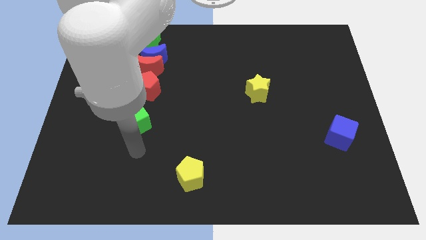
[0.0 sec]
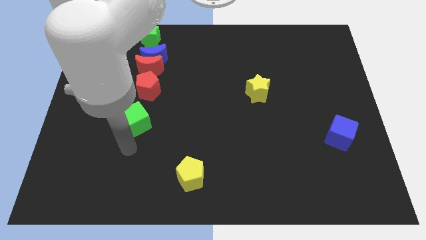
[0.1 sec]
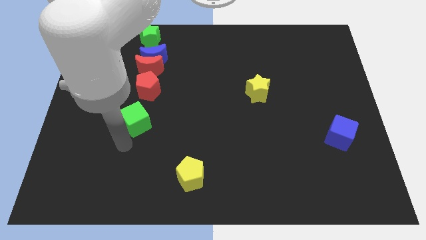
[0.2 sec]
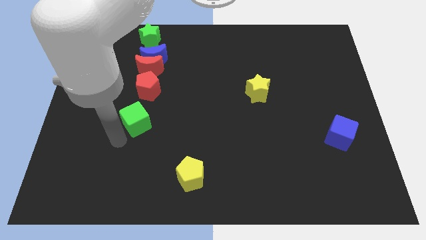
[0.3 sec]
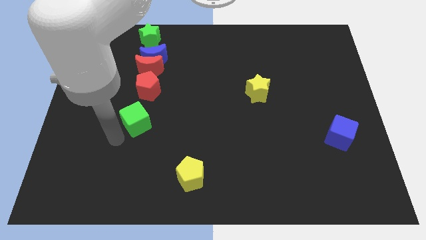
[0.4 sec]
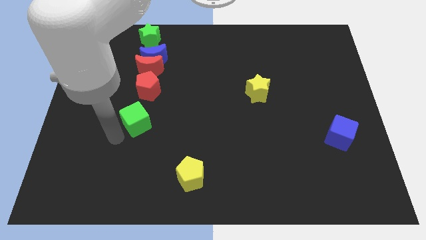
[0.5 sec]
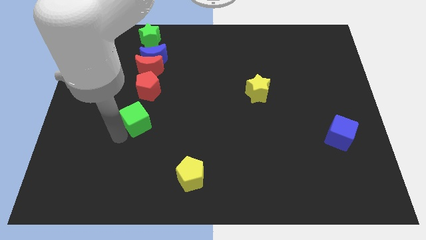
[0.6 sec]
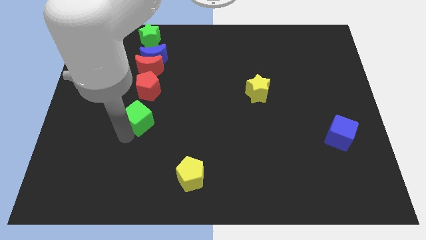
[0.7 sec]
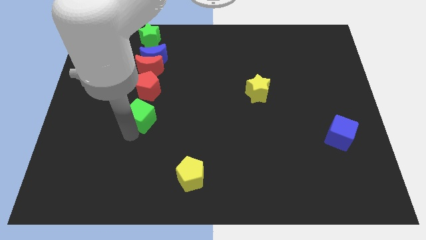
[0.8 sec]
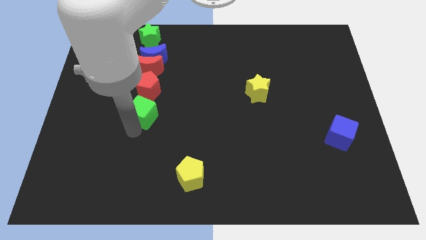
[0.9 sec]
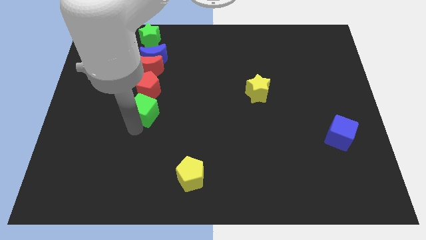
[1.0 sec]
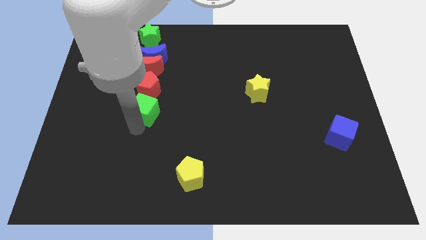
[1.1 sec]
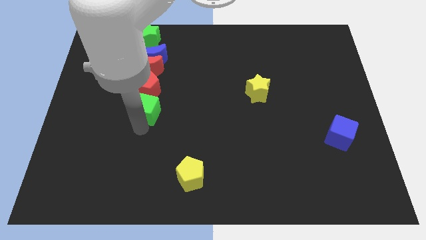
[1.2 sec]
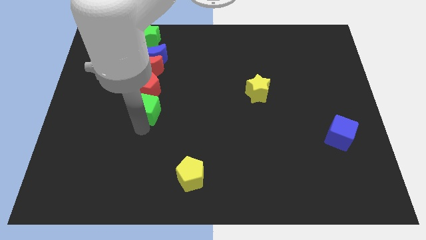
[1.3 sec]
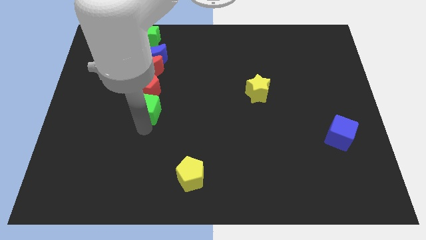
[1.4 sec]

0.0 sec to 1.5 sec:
move the green cube below the red pentagon

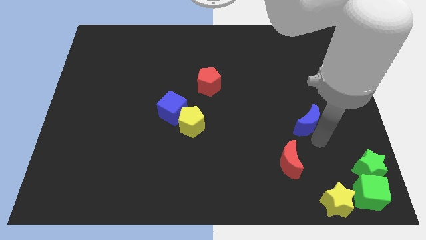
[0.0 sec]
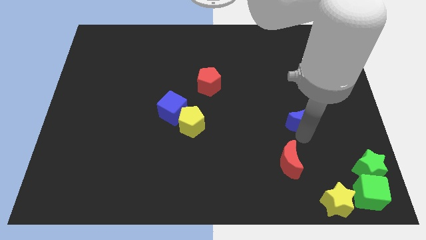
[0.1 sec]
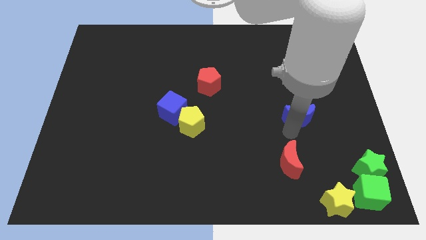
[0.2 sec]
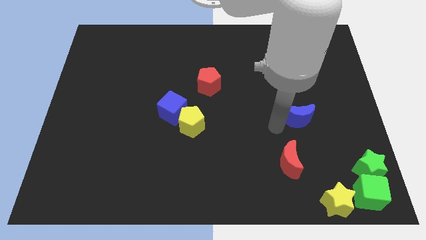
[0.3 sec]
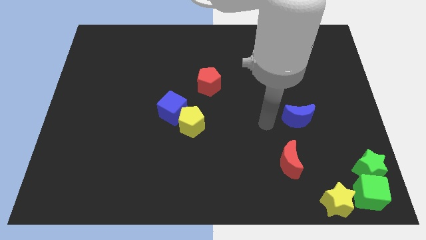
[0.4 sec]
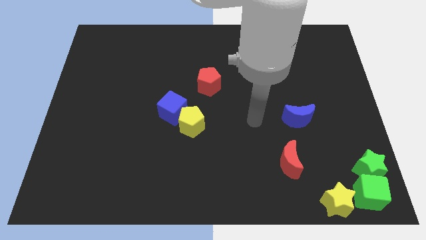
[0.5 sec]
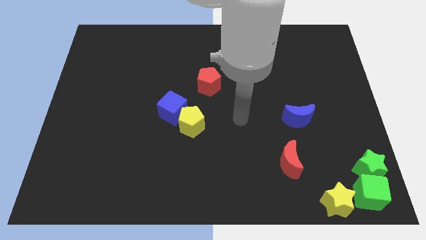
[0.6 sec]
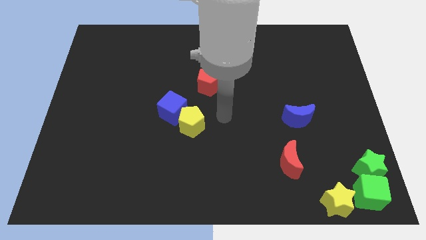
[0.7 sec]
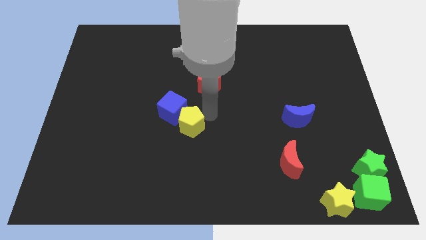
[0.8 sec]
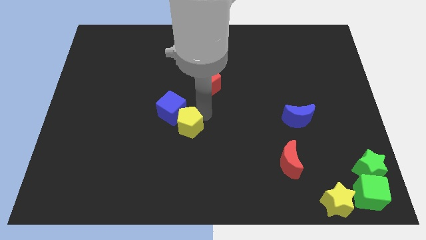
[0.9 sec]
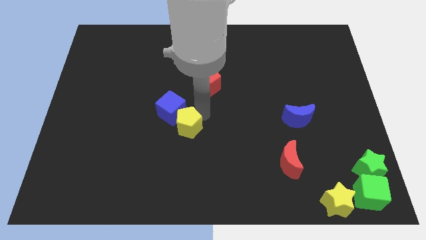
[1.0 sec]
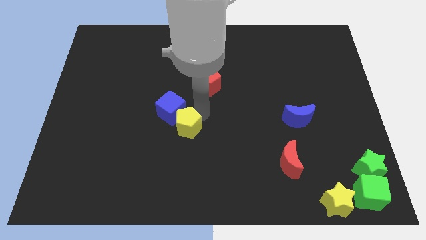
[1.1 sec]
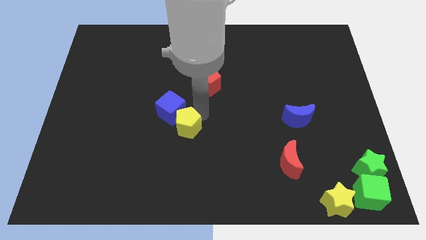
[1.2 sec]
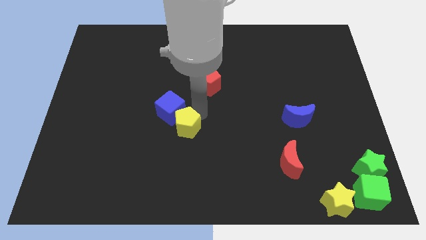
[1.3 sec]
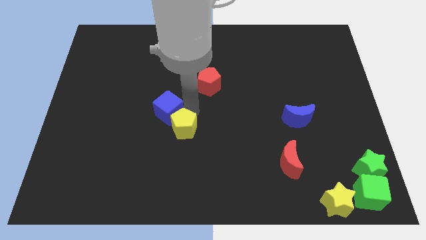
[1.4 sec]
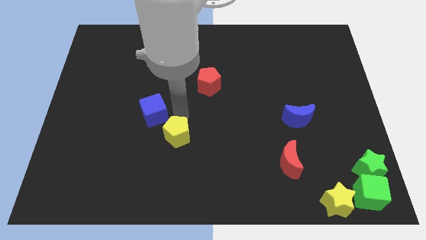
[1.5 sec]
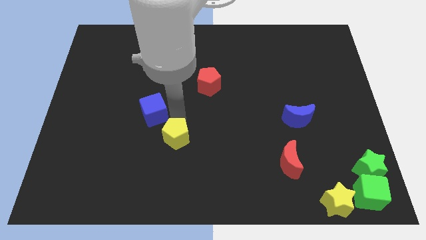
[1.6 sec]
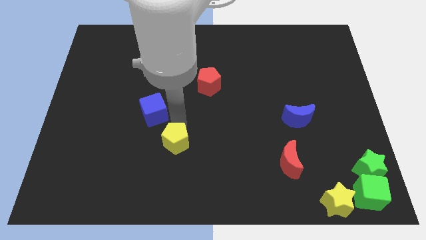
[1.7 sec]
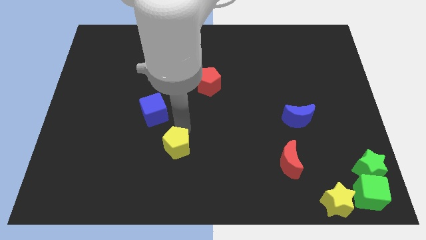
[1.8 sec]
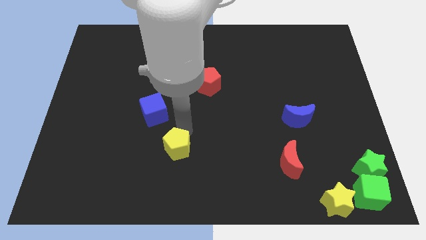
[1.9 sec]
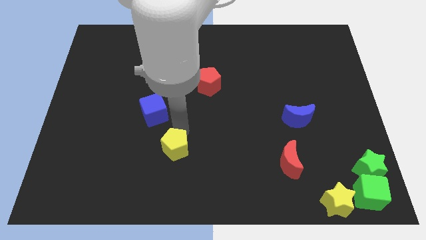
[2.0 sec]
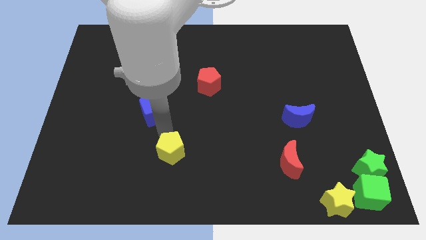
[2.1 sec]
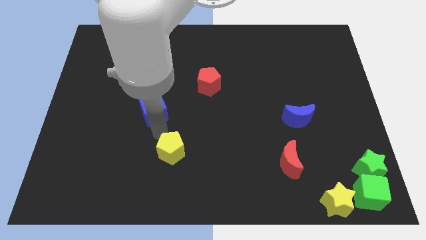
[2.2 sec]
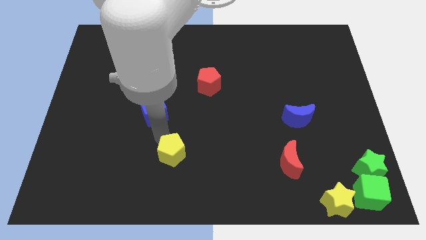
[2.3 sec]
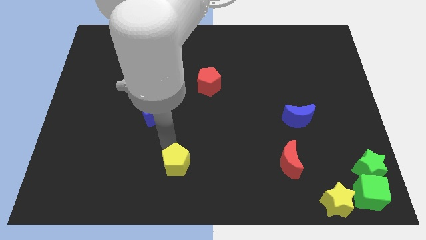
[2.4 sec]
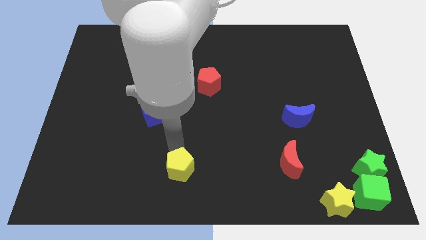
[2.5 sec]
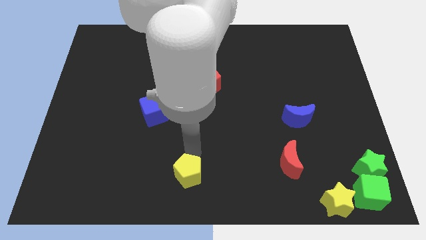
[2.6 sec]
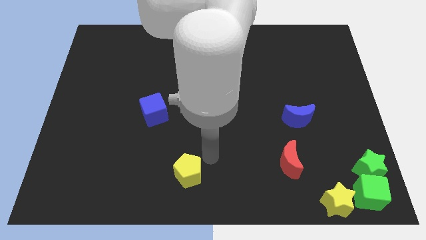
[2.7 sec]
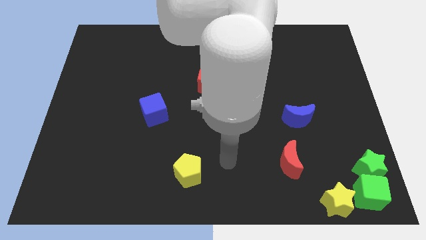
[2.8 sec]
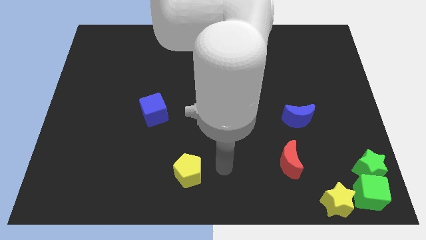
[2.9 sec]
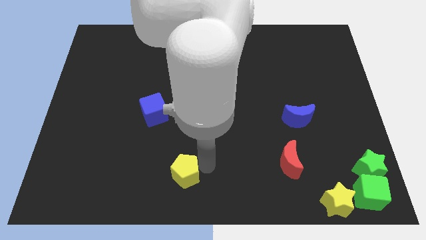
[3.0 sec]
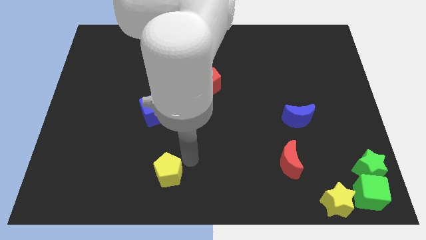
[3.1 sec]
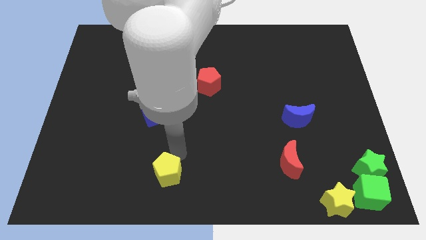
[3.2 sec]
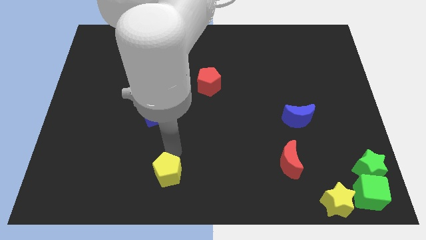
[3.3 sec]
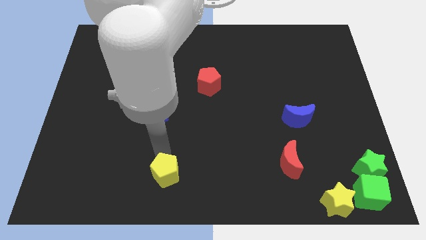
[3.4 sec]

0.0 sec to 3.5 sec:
place the yellow pentagon vertically below the blue cube

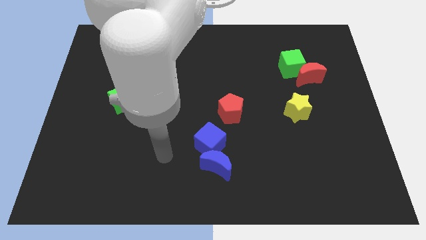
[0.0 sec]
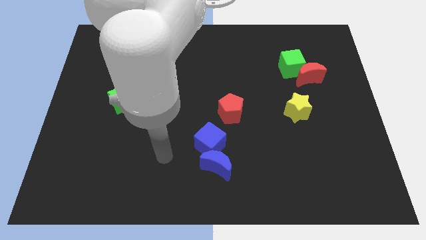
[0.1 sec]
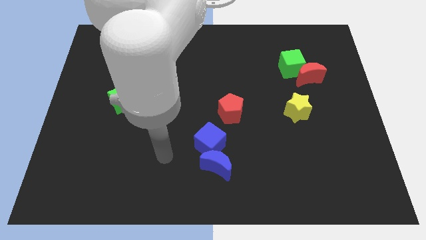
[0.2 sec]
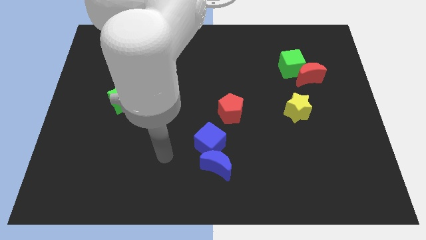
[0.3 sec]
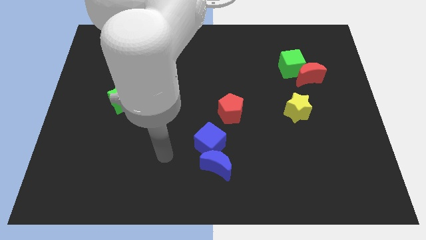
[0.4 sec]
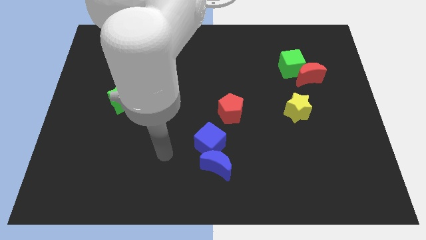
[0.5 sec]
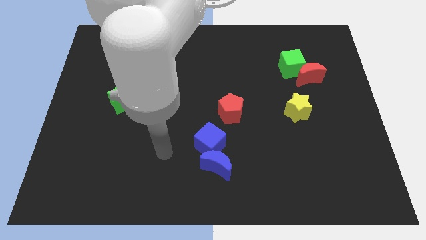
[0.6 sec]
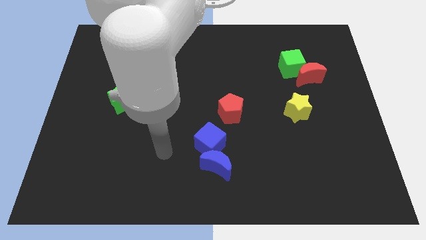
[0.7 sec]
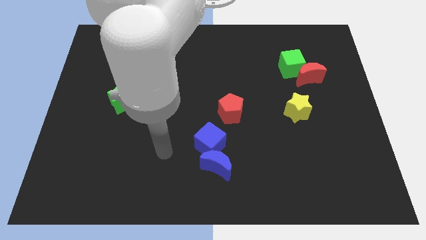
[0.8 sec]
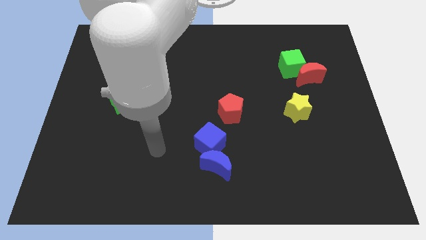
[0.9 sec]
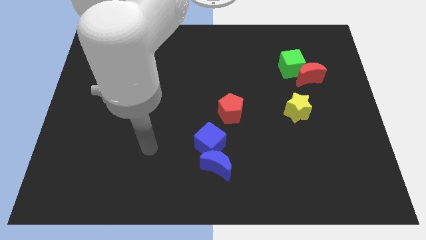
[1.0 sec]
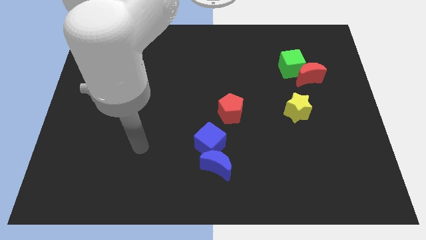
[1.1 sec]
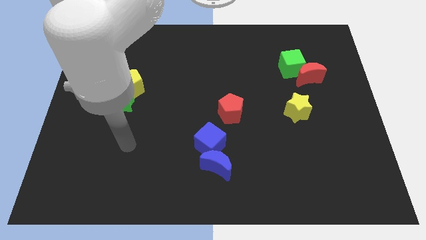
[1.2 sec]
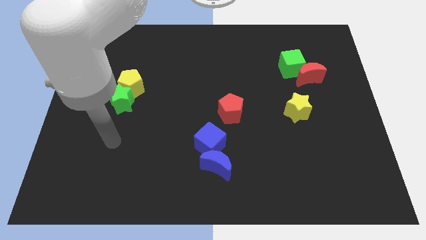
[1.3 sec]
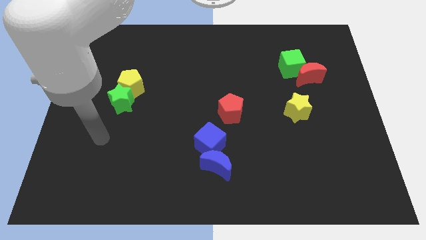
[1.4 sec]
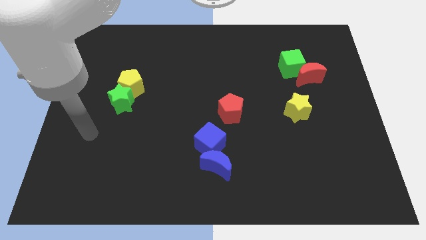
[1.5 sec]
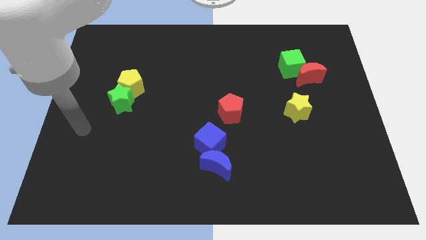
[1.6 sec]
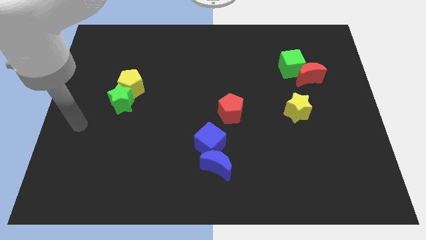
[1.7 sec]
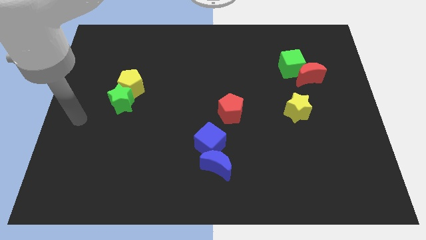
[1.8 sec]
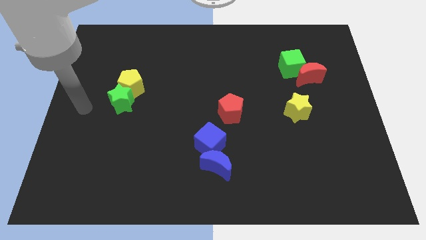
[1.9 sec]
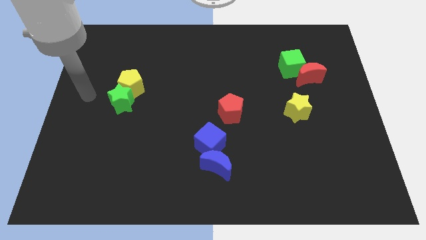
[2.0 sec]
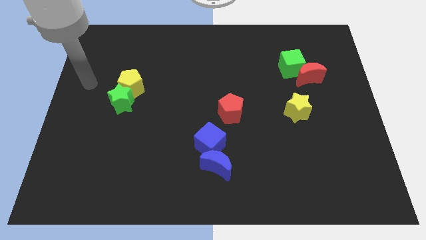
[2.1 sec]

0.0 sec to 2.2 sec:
point your hand at the left side of the green star

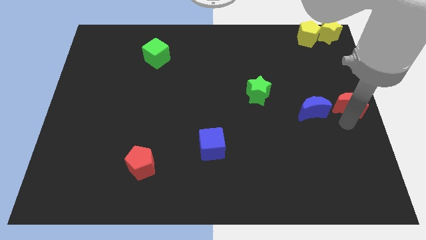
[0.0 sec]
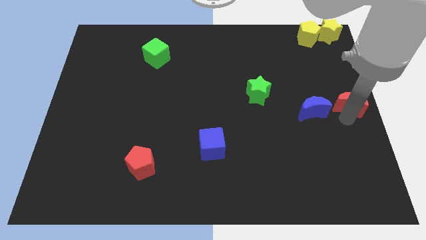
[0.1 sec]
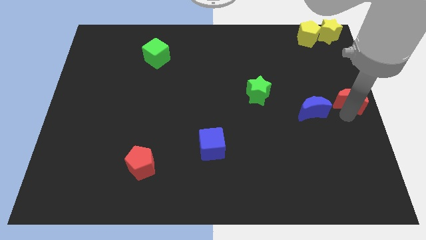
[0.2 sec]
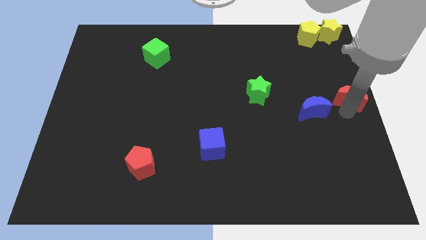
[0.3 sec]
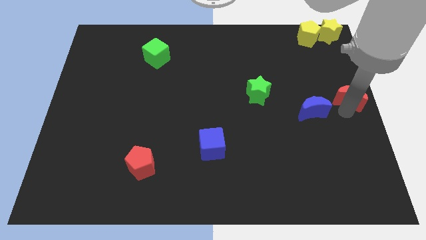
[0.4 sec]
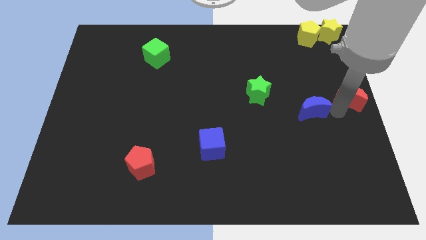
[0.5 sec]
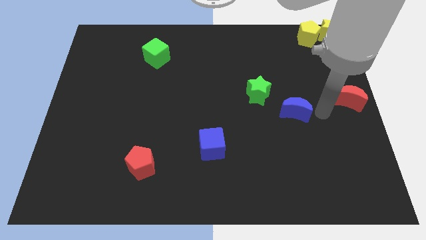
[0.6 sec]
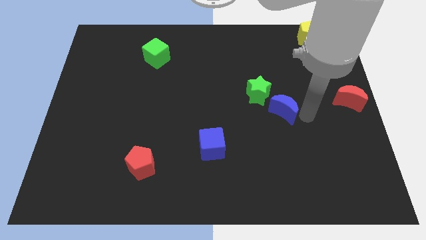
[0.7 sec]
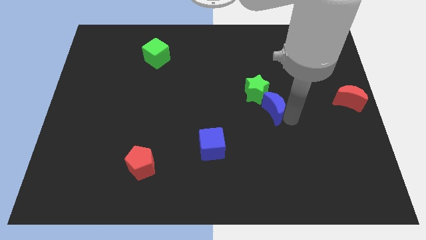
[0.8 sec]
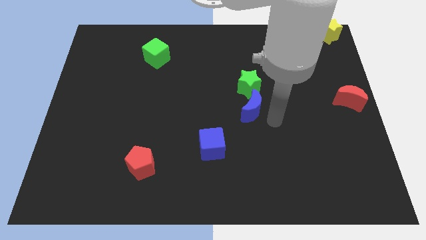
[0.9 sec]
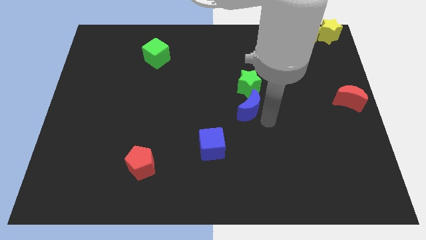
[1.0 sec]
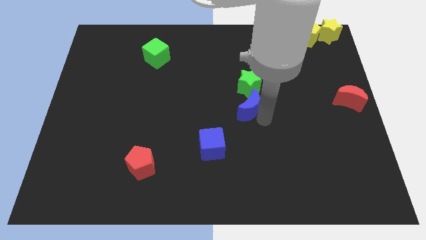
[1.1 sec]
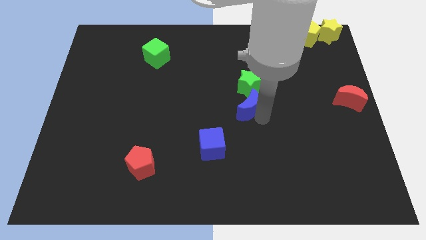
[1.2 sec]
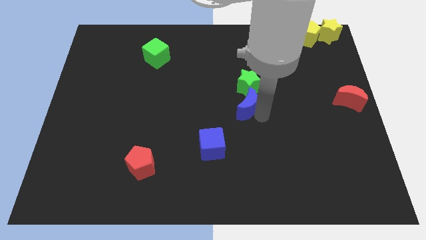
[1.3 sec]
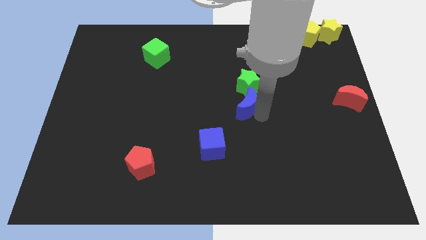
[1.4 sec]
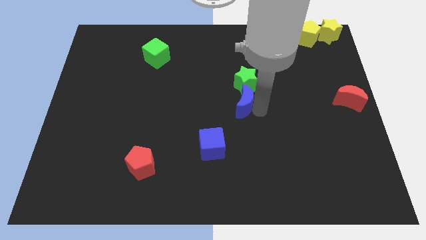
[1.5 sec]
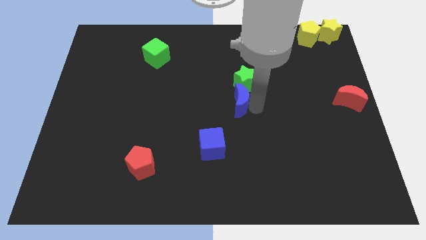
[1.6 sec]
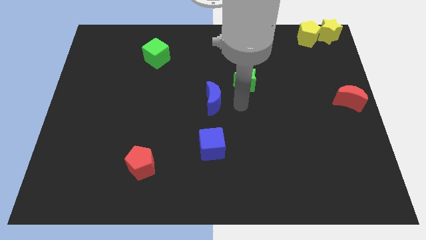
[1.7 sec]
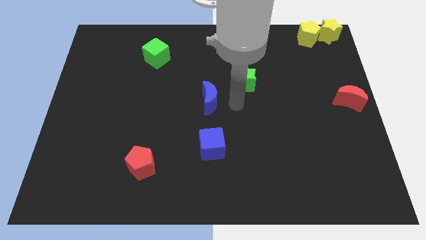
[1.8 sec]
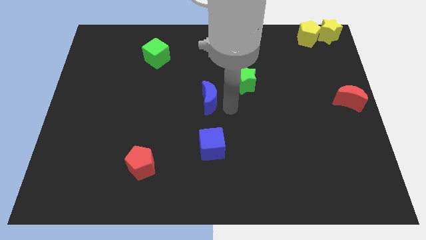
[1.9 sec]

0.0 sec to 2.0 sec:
move the blue crescent into the green star
